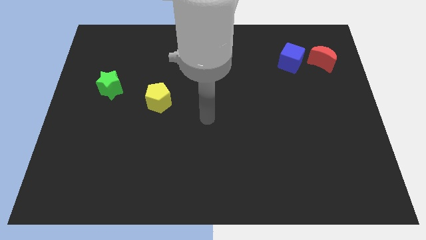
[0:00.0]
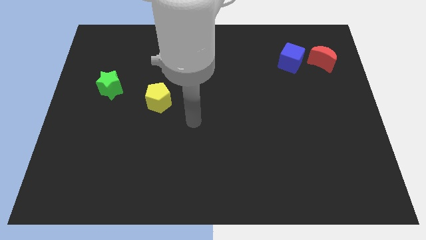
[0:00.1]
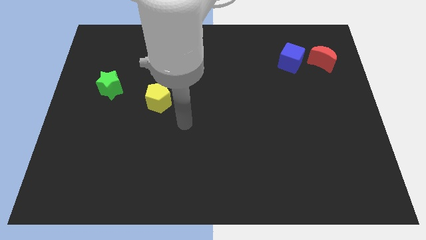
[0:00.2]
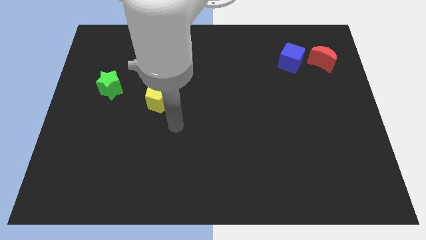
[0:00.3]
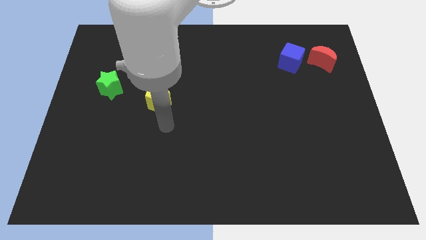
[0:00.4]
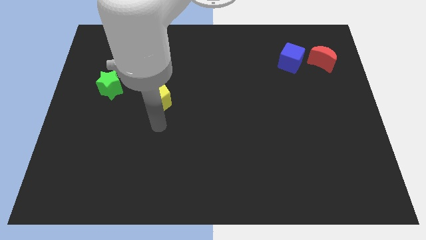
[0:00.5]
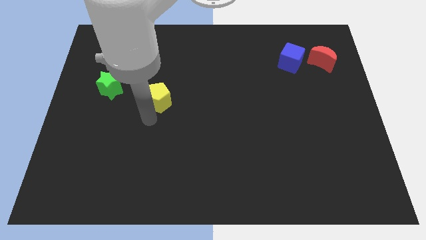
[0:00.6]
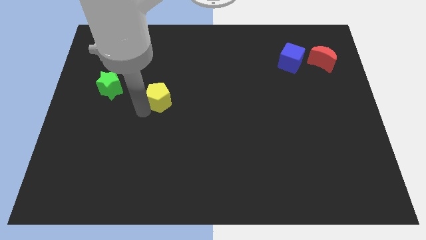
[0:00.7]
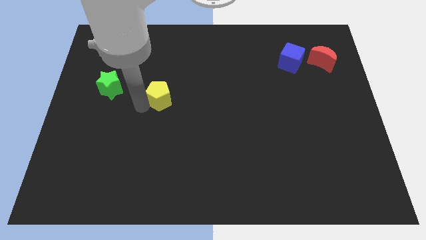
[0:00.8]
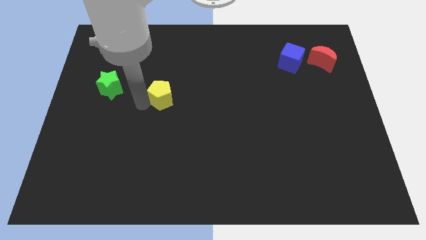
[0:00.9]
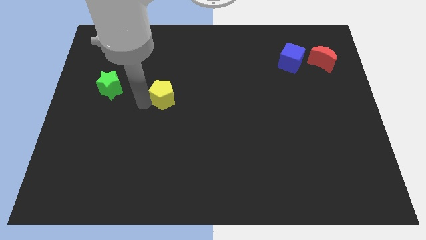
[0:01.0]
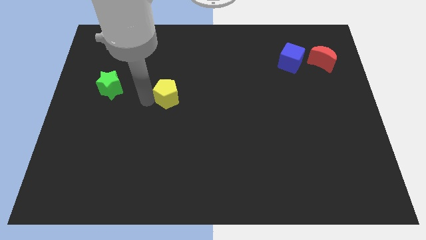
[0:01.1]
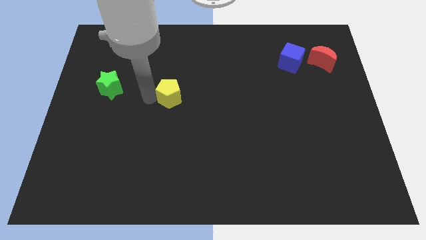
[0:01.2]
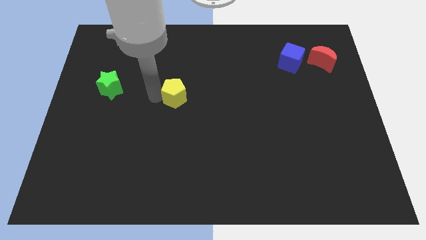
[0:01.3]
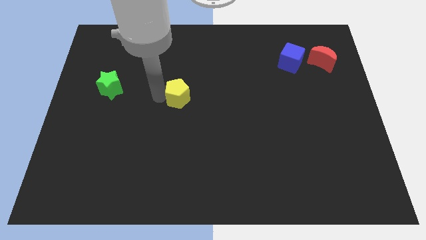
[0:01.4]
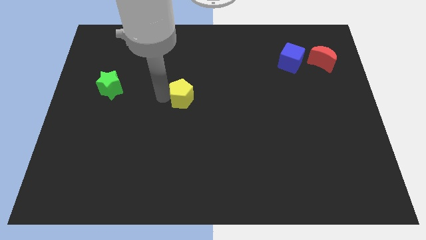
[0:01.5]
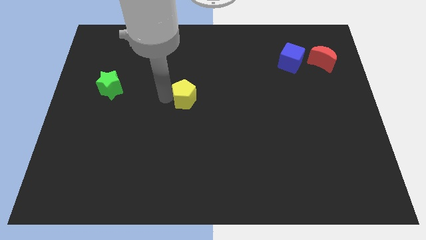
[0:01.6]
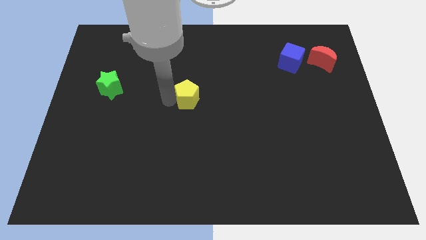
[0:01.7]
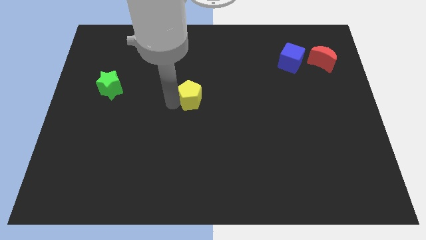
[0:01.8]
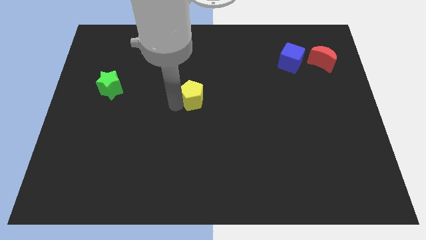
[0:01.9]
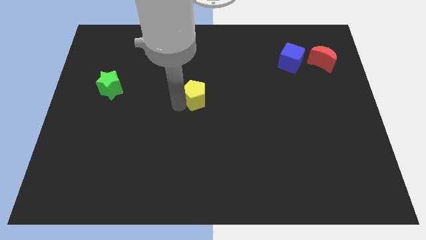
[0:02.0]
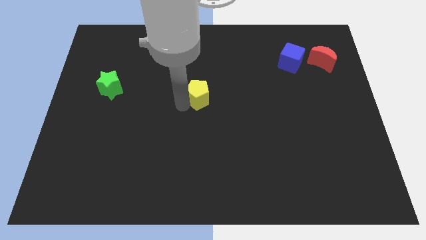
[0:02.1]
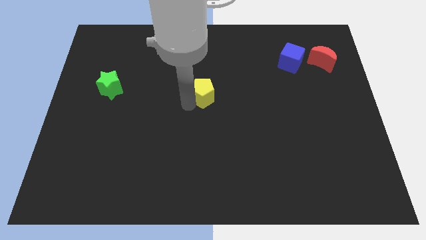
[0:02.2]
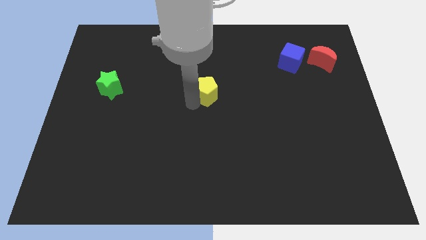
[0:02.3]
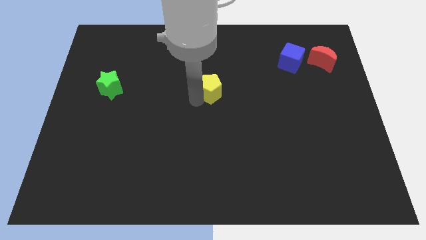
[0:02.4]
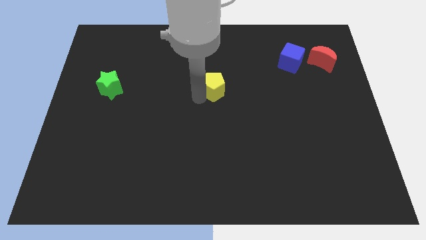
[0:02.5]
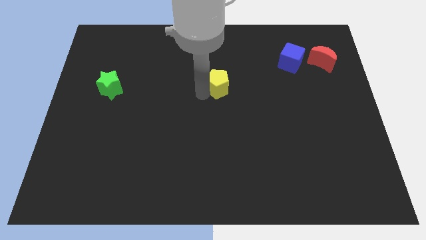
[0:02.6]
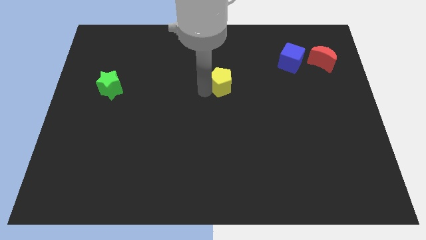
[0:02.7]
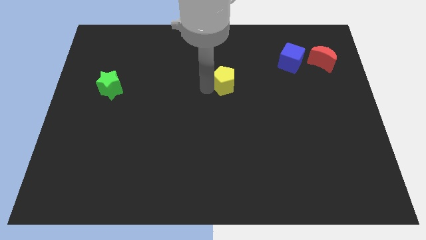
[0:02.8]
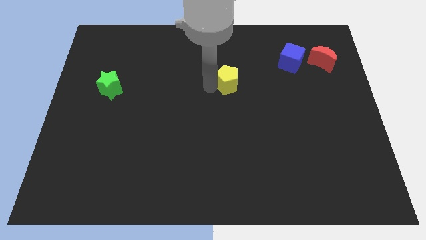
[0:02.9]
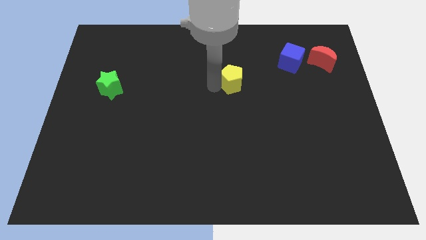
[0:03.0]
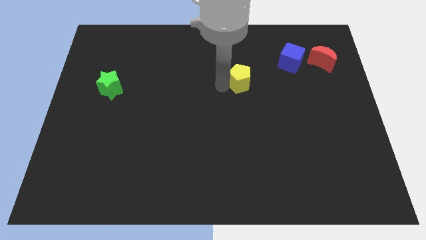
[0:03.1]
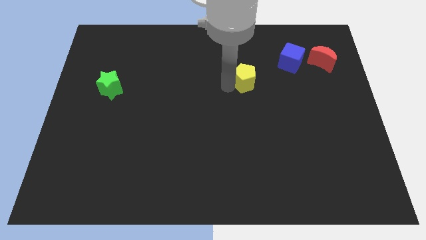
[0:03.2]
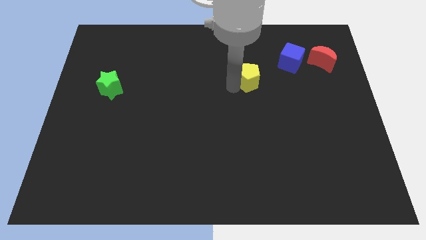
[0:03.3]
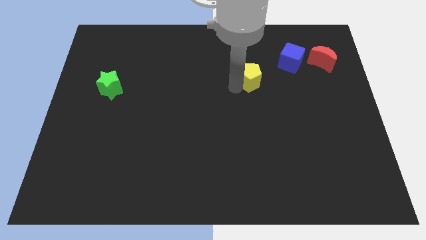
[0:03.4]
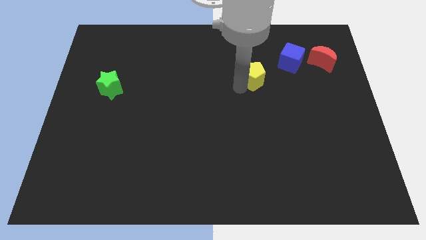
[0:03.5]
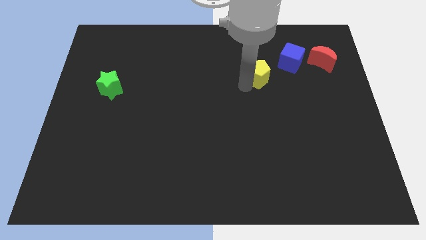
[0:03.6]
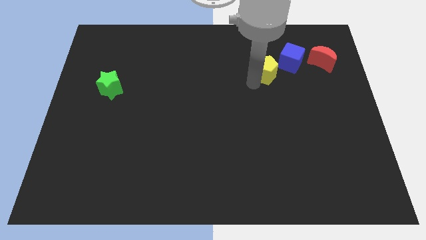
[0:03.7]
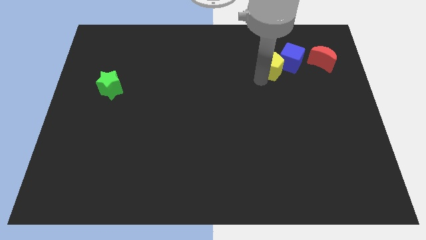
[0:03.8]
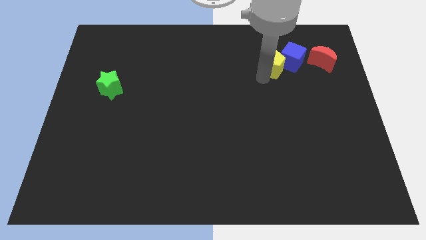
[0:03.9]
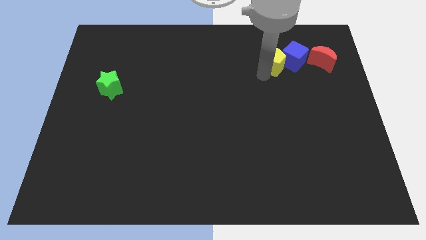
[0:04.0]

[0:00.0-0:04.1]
push the pentagon to the blue block

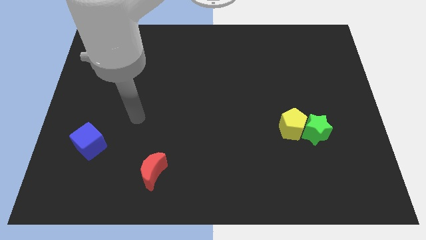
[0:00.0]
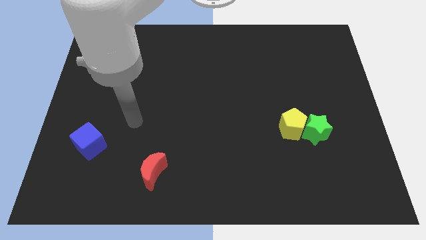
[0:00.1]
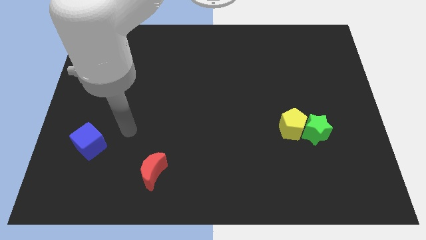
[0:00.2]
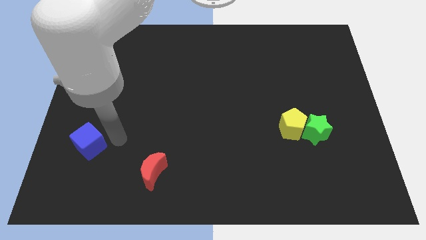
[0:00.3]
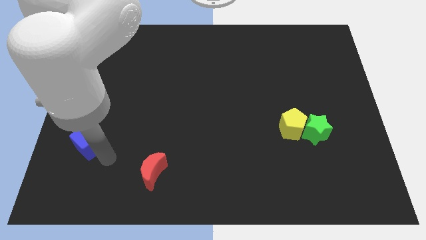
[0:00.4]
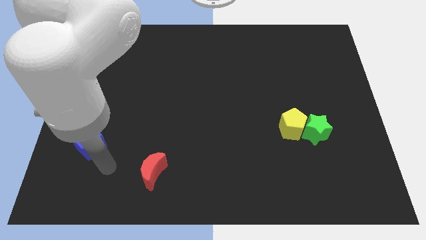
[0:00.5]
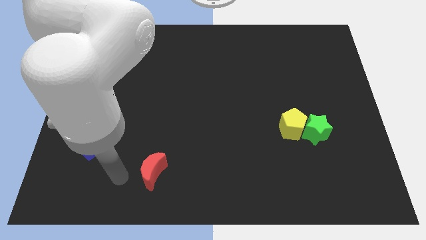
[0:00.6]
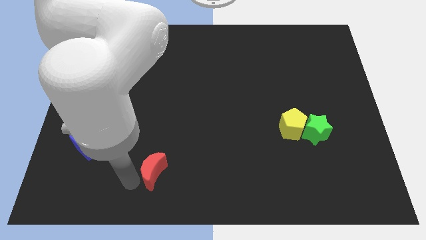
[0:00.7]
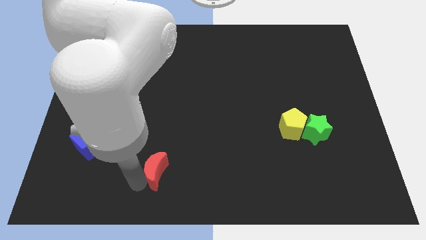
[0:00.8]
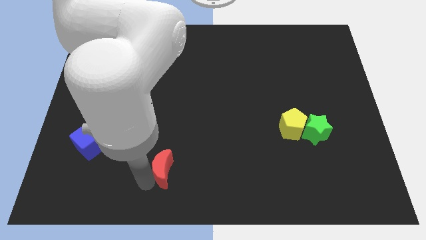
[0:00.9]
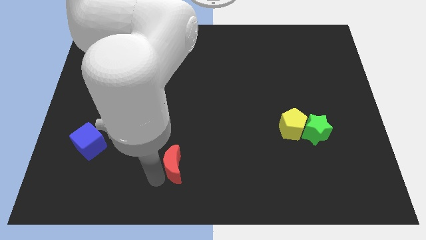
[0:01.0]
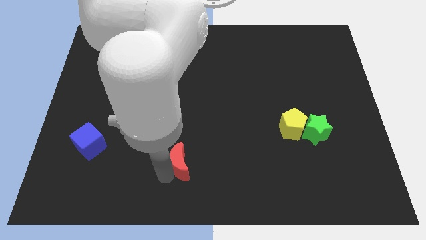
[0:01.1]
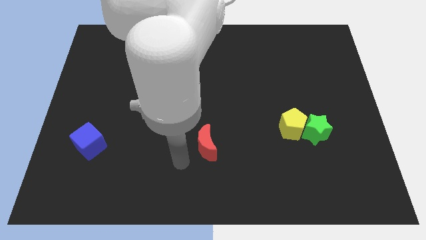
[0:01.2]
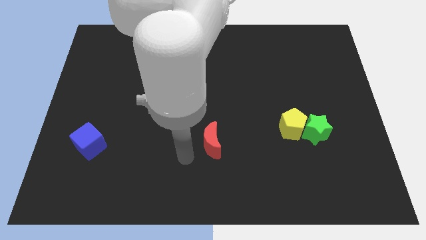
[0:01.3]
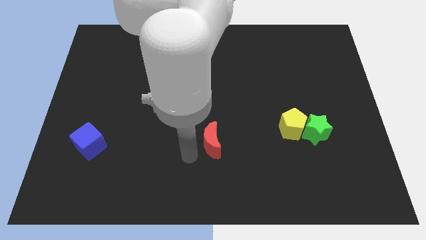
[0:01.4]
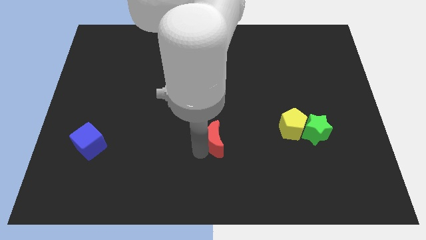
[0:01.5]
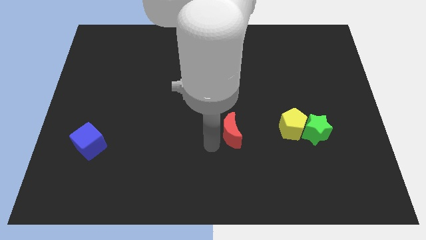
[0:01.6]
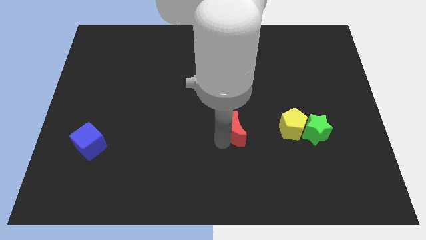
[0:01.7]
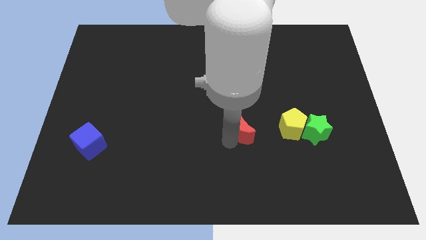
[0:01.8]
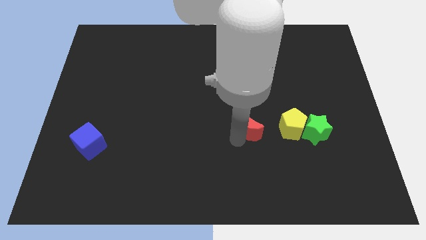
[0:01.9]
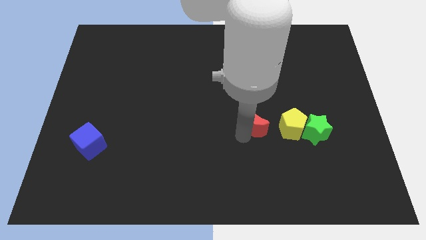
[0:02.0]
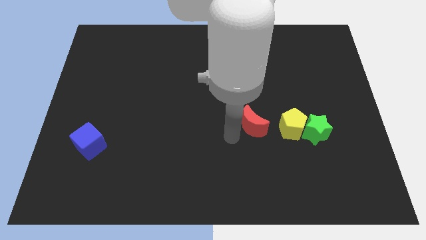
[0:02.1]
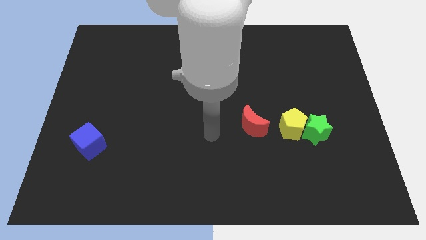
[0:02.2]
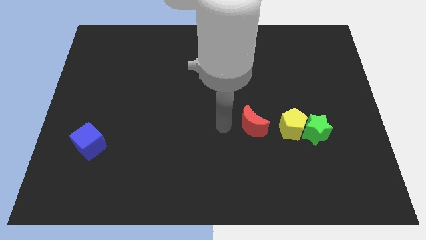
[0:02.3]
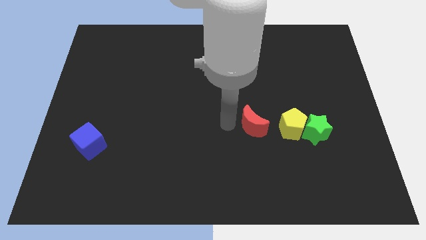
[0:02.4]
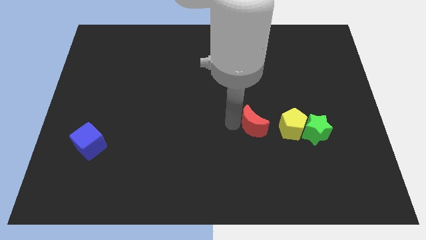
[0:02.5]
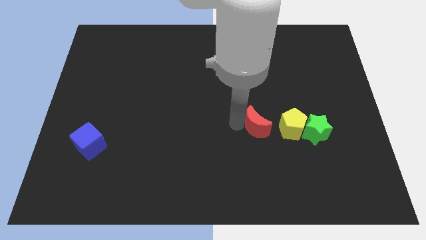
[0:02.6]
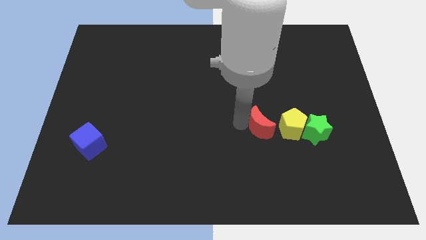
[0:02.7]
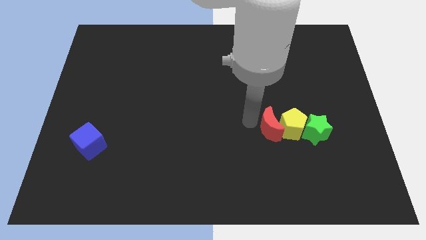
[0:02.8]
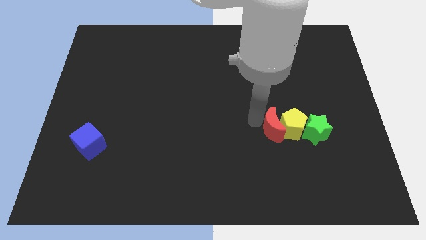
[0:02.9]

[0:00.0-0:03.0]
slide the red block towards the yellow block

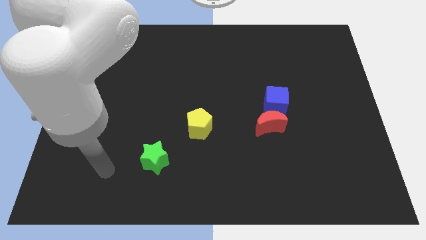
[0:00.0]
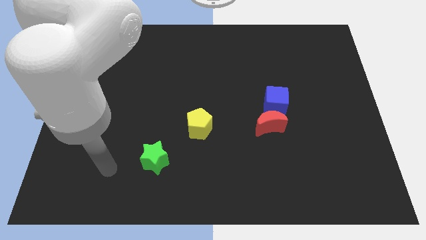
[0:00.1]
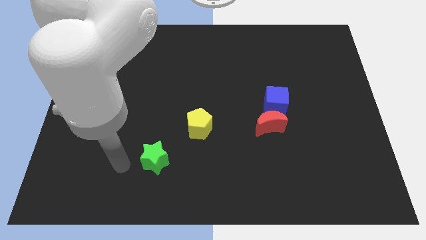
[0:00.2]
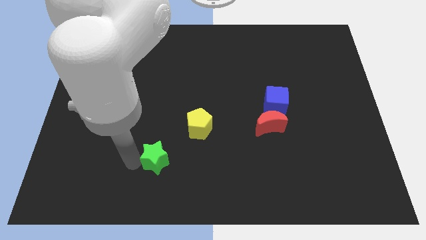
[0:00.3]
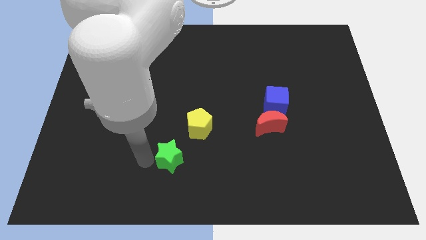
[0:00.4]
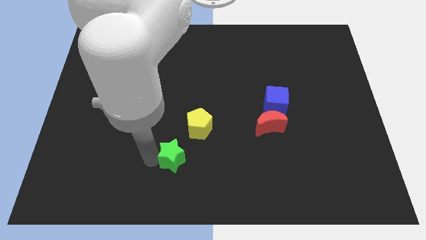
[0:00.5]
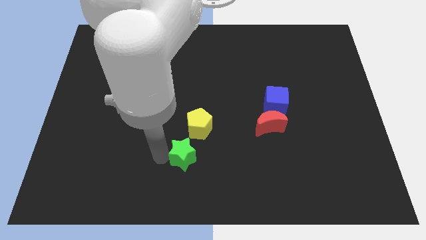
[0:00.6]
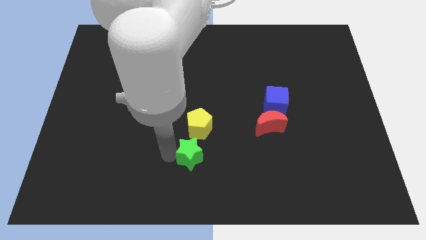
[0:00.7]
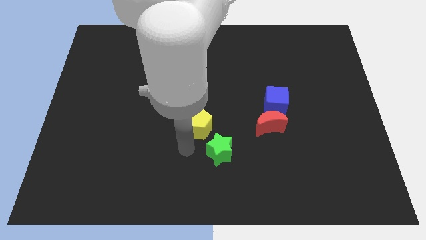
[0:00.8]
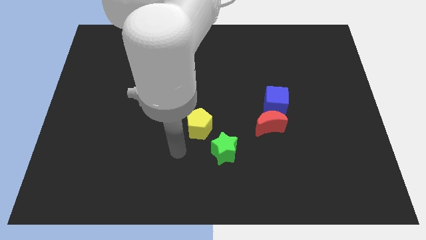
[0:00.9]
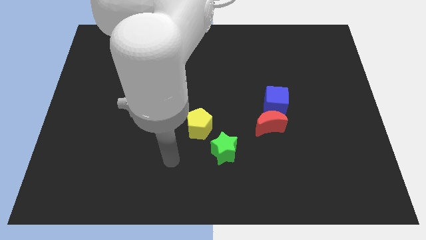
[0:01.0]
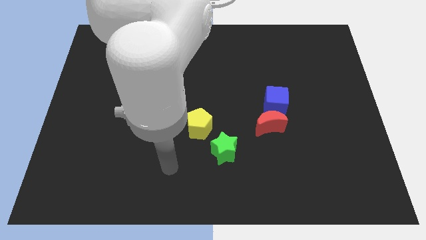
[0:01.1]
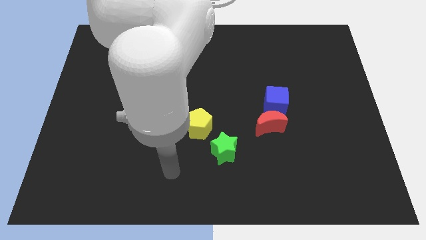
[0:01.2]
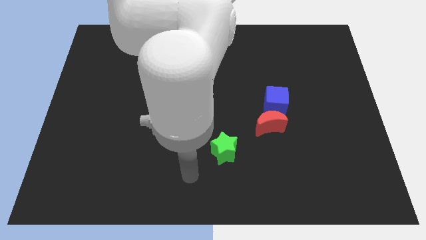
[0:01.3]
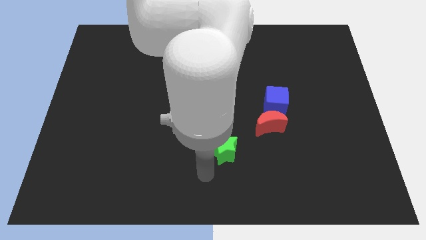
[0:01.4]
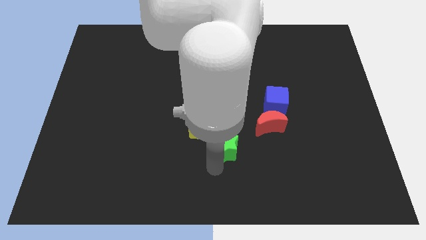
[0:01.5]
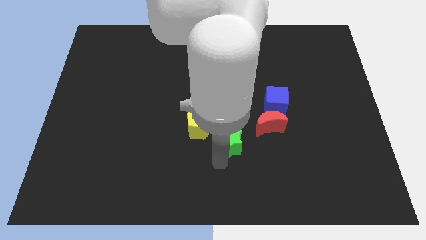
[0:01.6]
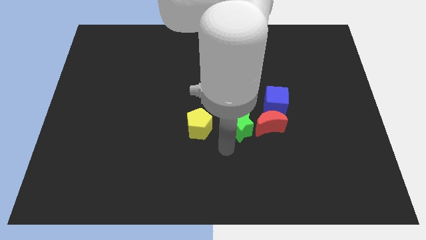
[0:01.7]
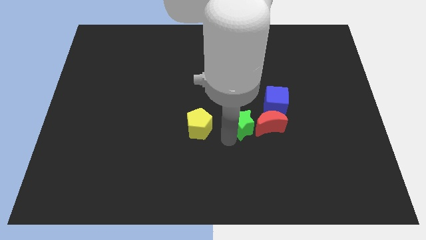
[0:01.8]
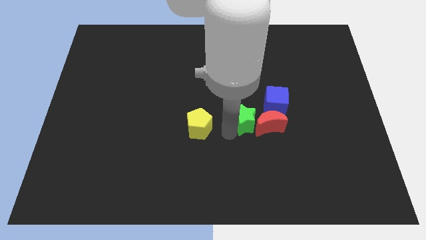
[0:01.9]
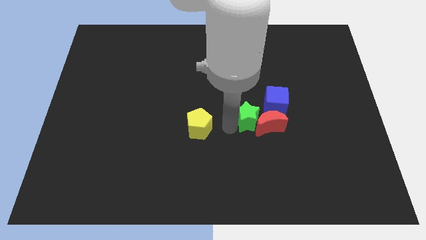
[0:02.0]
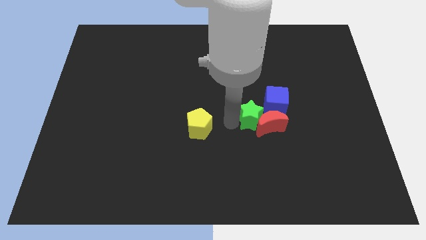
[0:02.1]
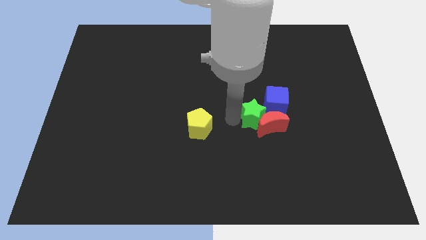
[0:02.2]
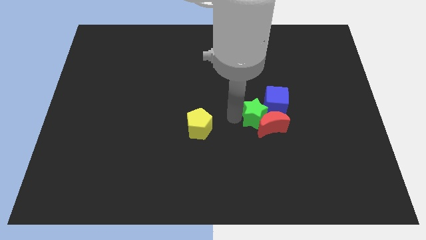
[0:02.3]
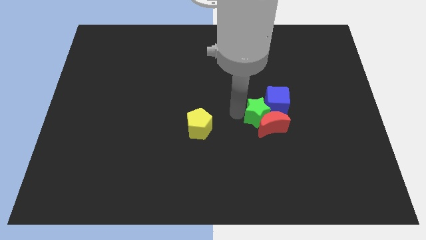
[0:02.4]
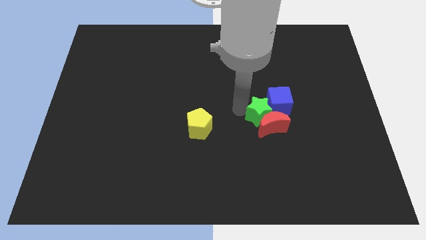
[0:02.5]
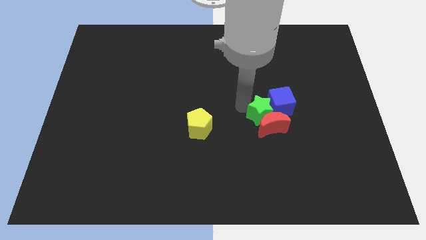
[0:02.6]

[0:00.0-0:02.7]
push the green star to the blue cube
